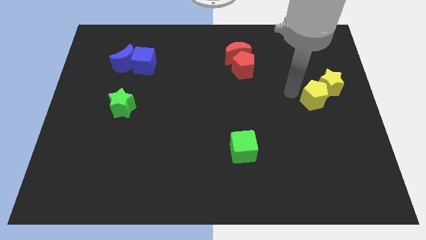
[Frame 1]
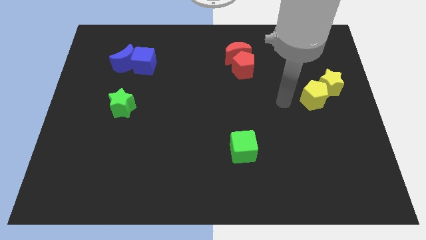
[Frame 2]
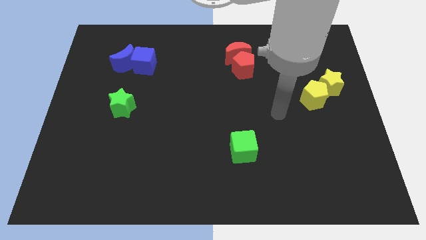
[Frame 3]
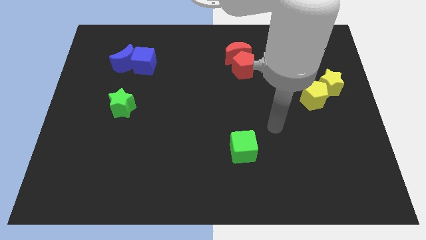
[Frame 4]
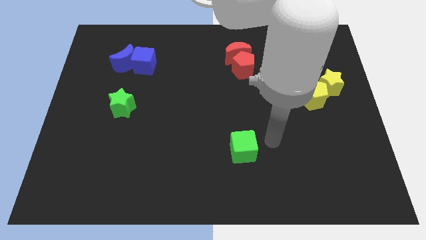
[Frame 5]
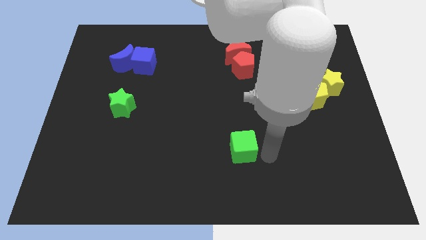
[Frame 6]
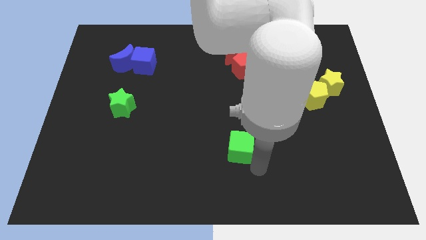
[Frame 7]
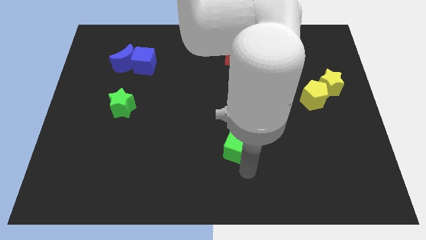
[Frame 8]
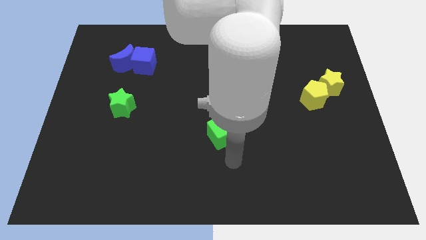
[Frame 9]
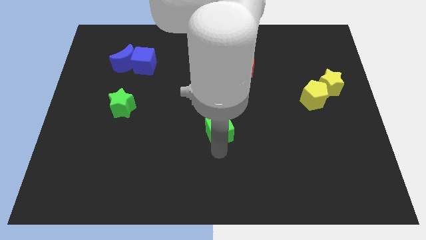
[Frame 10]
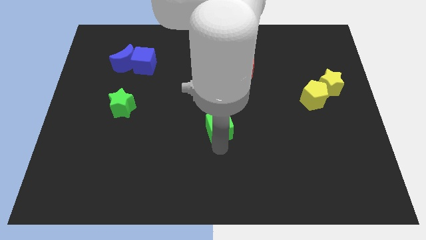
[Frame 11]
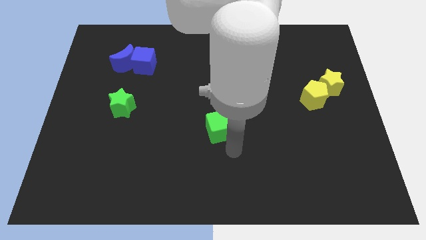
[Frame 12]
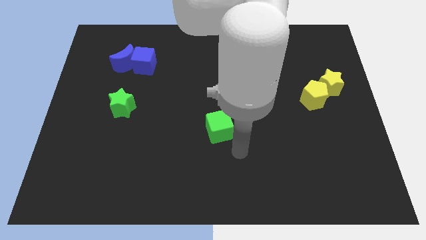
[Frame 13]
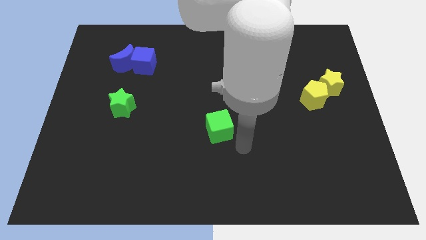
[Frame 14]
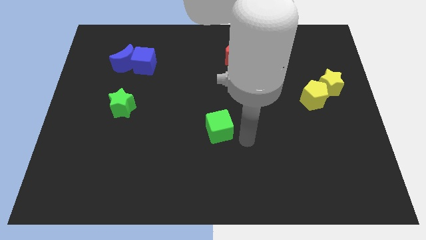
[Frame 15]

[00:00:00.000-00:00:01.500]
move the green cube to the bottom left of the red pentagon

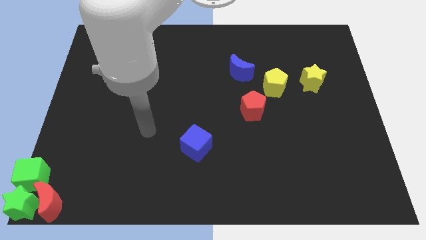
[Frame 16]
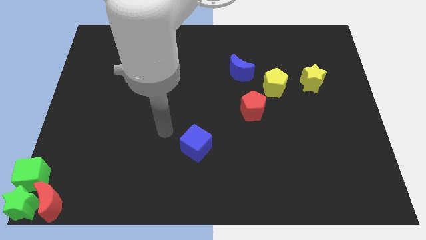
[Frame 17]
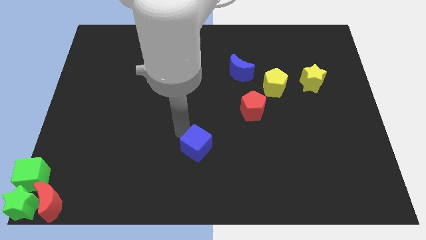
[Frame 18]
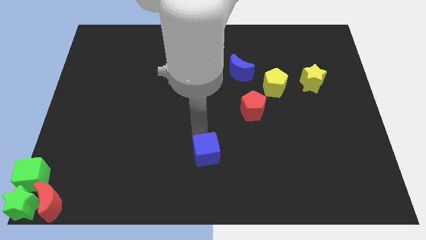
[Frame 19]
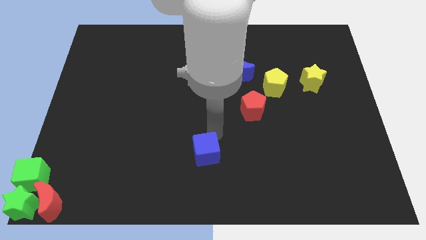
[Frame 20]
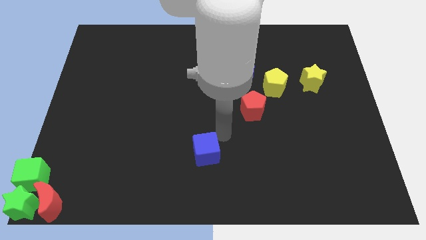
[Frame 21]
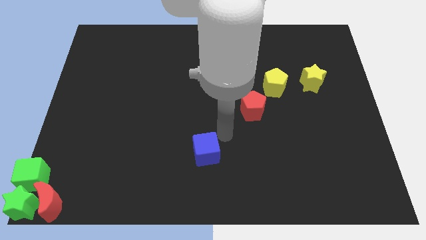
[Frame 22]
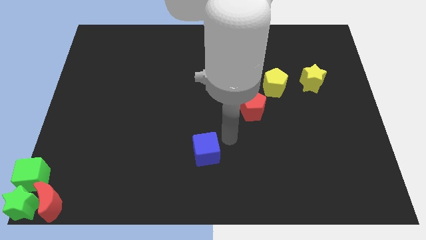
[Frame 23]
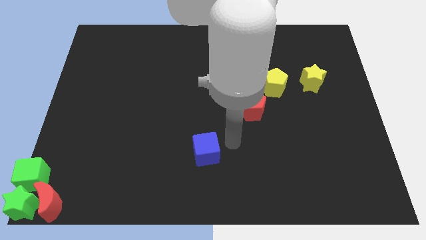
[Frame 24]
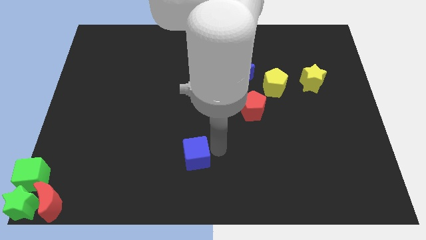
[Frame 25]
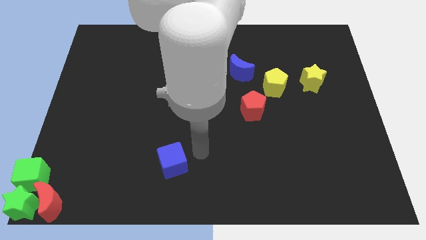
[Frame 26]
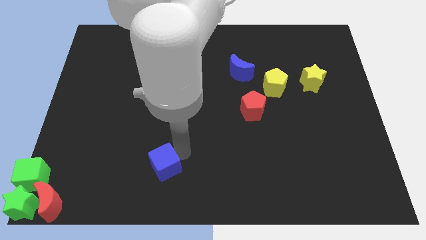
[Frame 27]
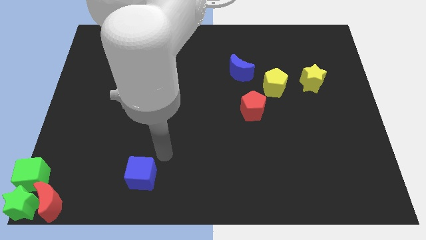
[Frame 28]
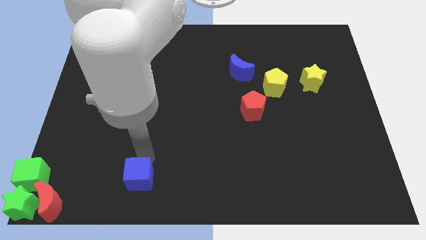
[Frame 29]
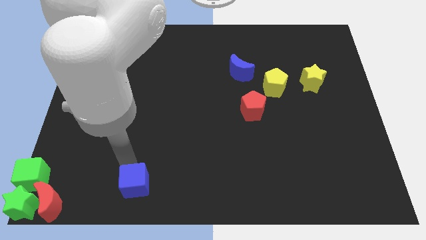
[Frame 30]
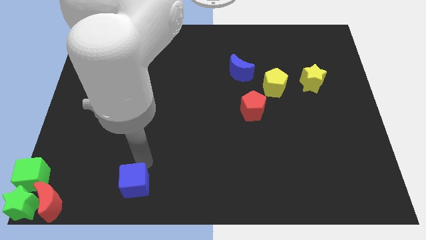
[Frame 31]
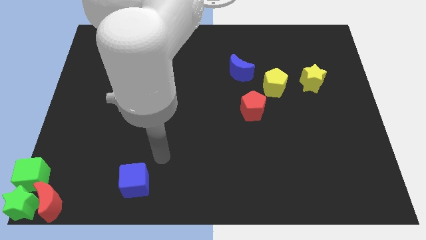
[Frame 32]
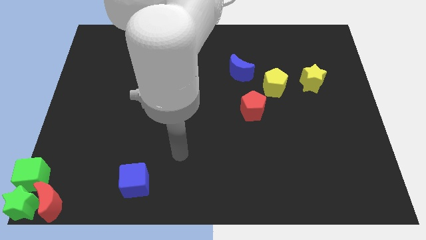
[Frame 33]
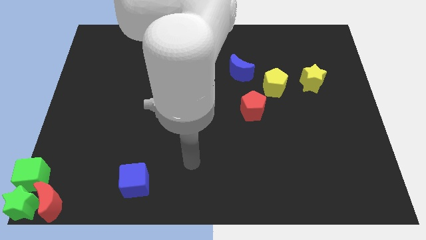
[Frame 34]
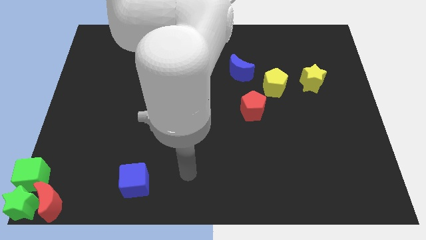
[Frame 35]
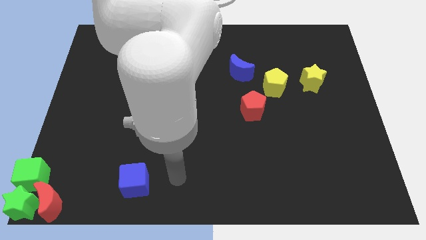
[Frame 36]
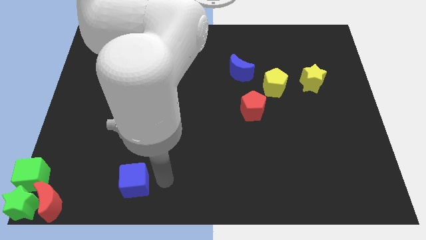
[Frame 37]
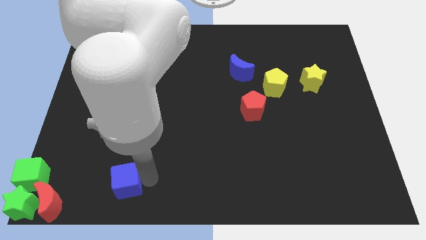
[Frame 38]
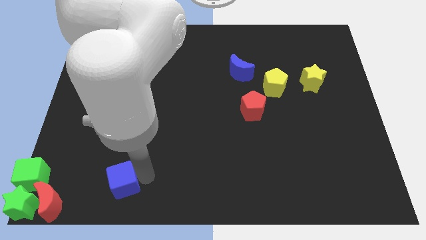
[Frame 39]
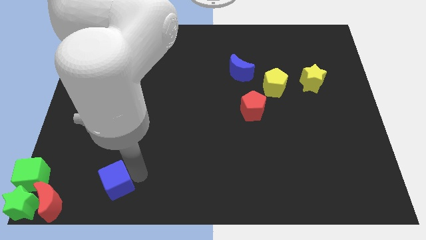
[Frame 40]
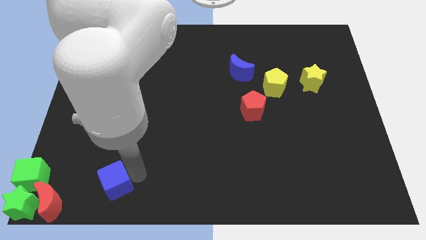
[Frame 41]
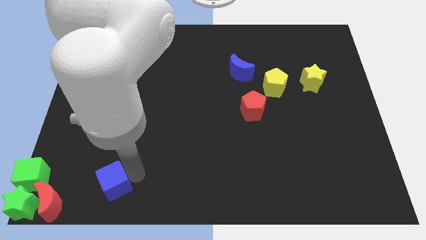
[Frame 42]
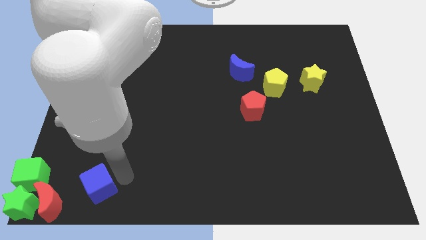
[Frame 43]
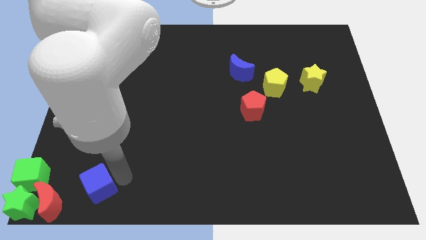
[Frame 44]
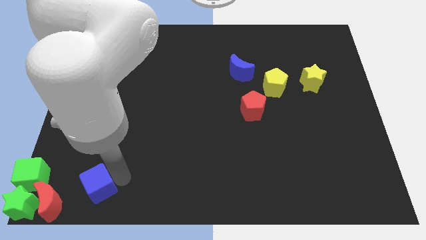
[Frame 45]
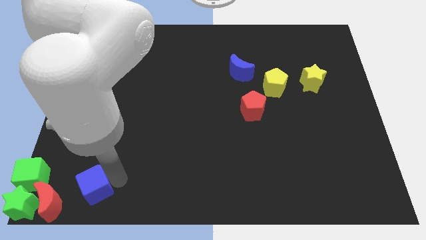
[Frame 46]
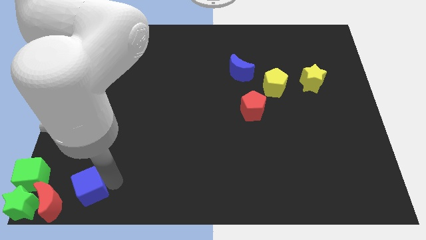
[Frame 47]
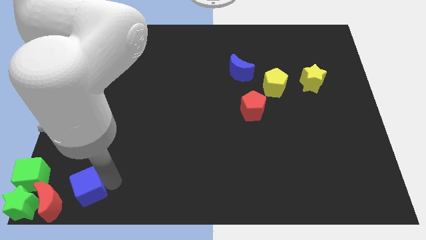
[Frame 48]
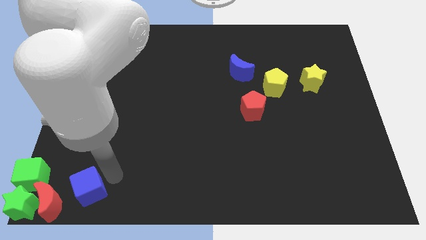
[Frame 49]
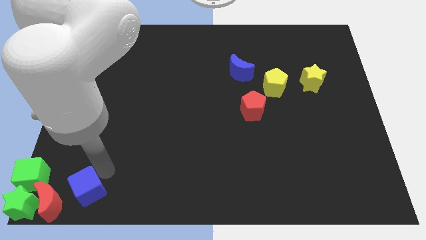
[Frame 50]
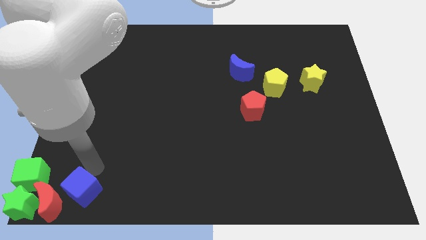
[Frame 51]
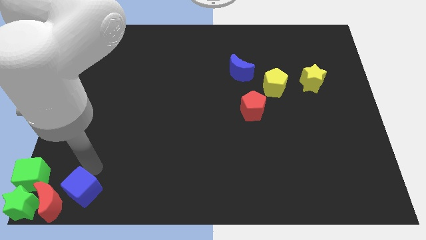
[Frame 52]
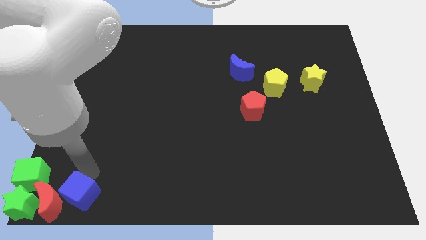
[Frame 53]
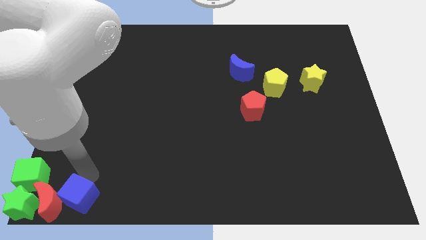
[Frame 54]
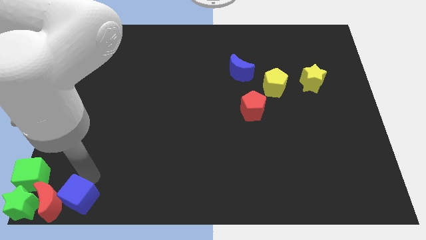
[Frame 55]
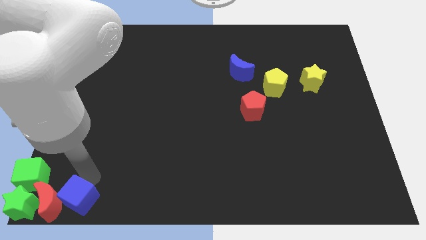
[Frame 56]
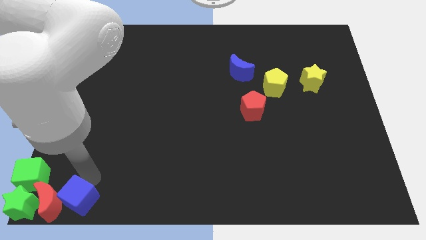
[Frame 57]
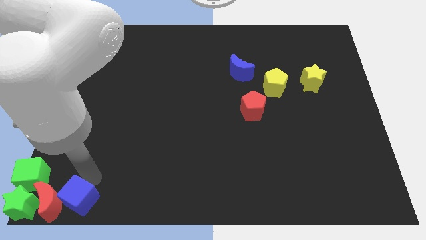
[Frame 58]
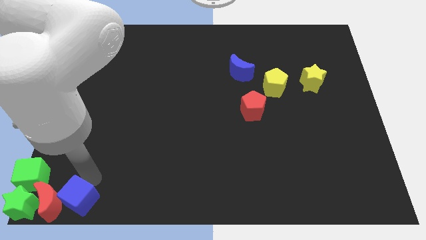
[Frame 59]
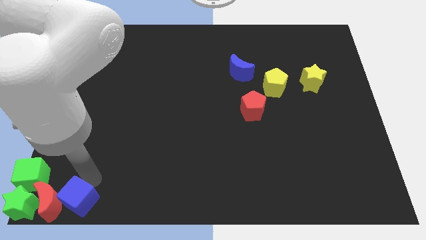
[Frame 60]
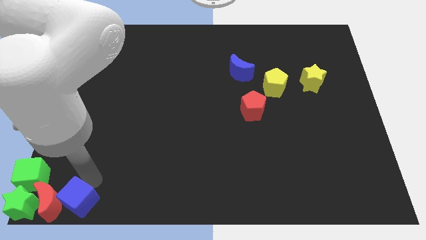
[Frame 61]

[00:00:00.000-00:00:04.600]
push the blue cube to the right of the red crescent

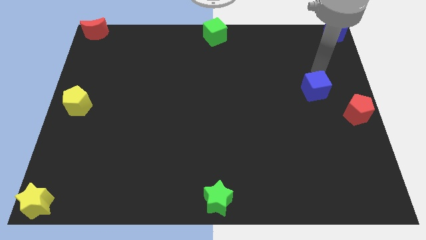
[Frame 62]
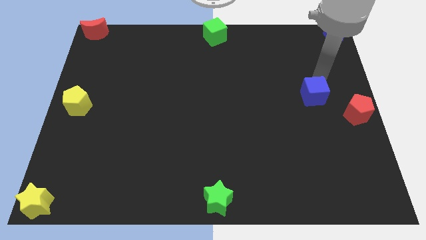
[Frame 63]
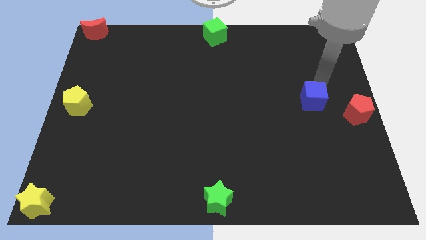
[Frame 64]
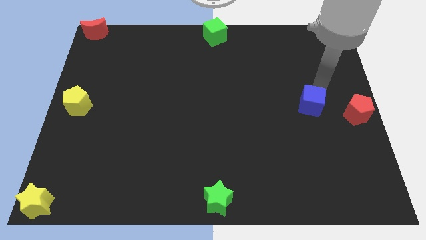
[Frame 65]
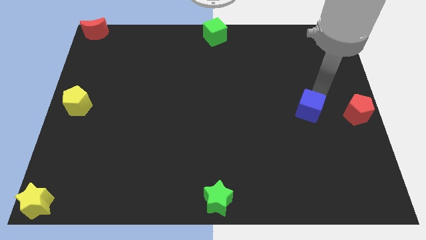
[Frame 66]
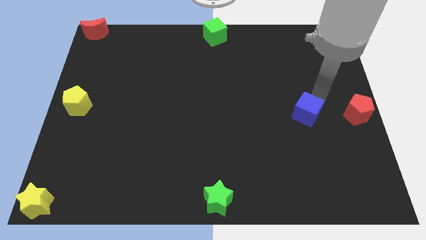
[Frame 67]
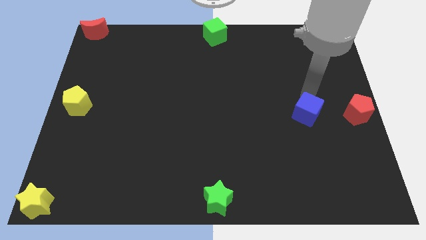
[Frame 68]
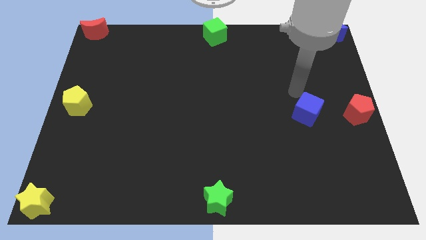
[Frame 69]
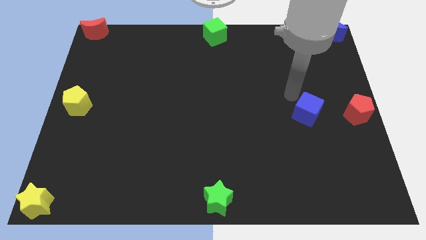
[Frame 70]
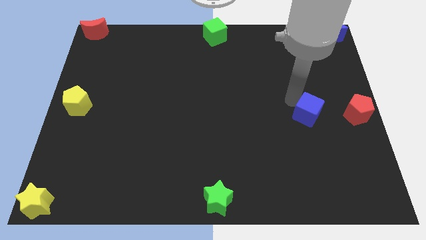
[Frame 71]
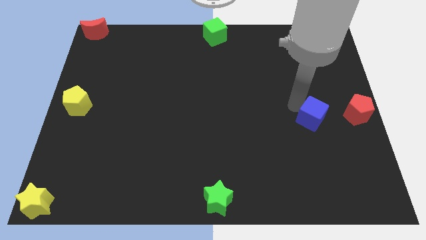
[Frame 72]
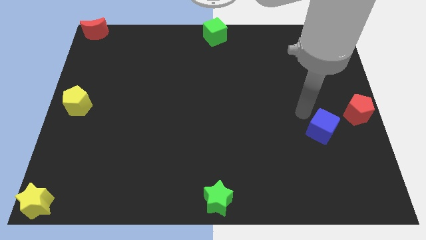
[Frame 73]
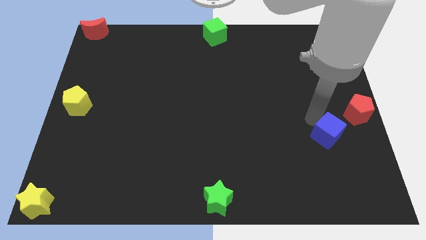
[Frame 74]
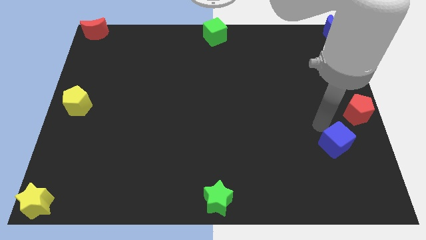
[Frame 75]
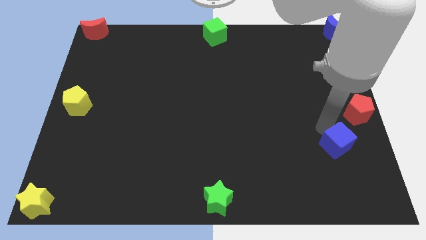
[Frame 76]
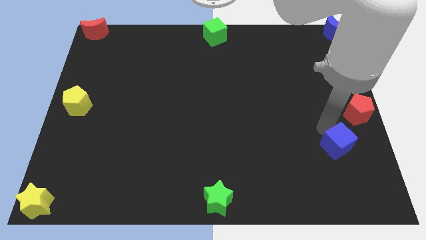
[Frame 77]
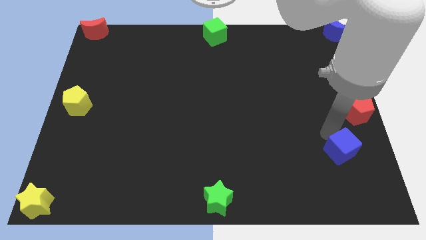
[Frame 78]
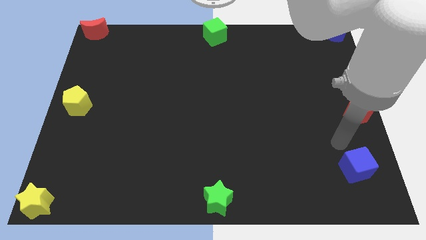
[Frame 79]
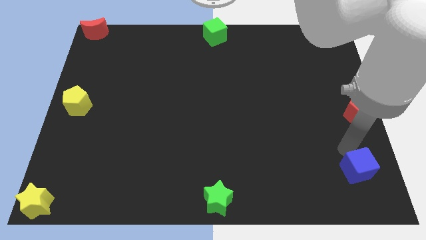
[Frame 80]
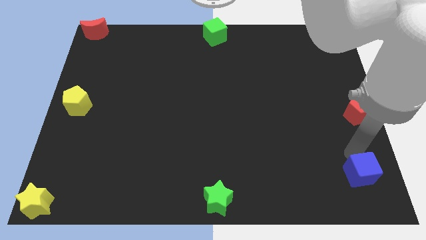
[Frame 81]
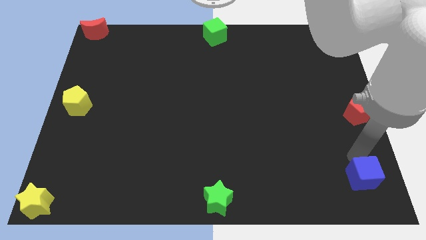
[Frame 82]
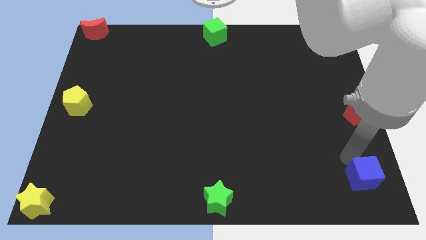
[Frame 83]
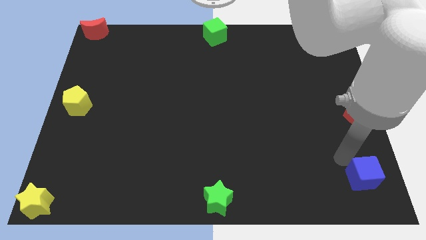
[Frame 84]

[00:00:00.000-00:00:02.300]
push the blue cube towards the bottom right corner of the board

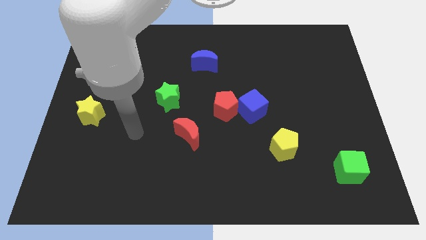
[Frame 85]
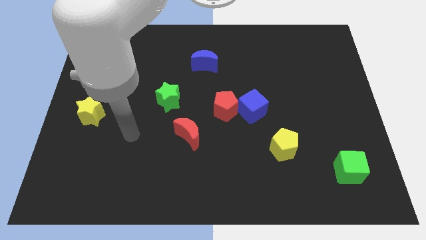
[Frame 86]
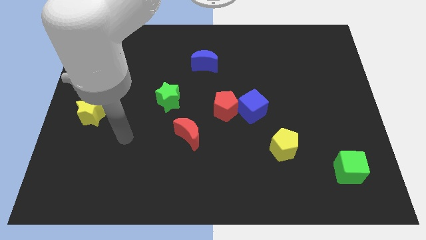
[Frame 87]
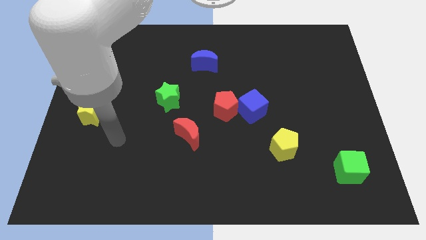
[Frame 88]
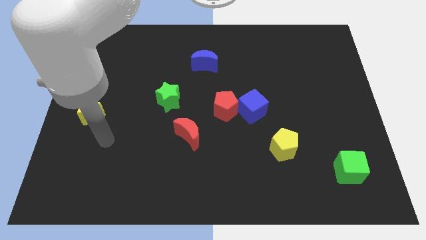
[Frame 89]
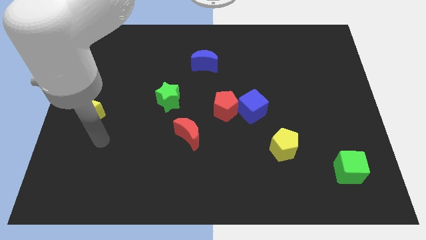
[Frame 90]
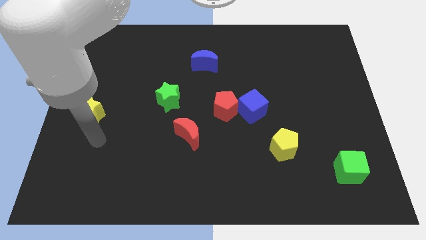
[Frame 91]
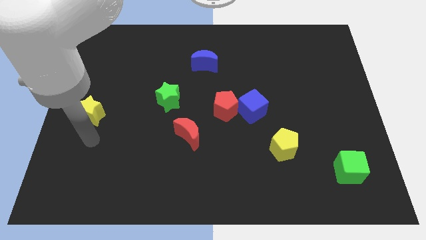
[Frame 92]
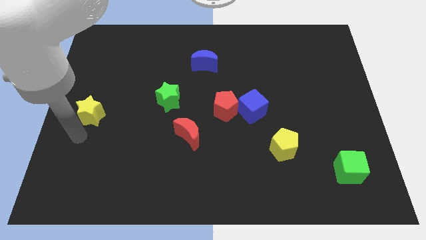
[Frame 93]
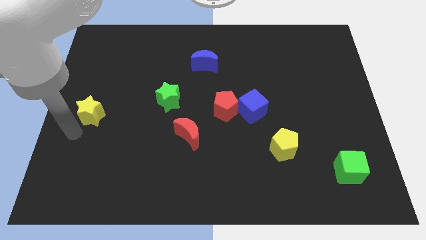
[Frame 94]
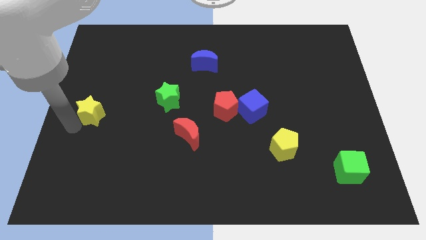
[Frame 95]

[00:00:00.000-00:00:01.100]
touch the bottom left of the yellow star
